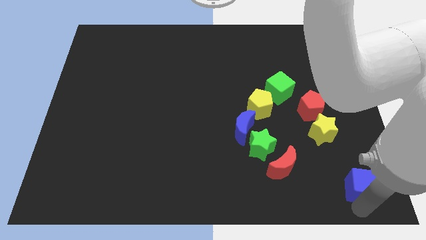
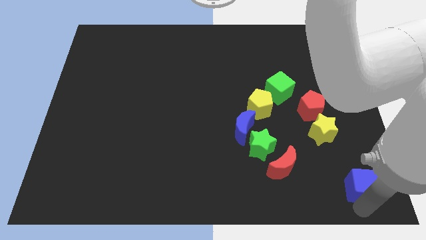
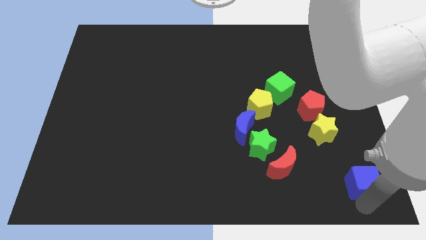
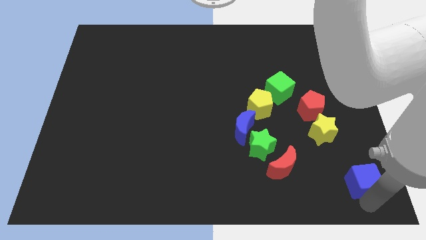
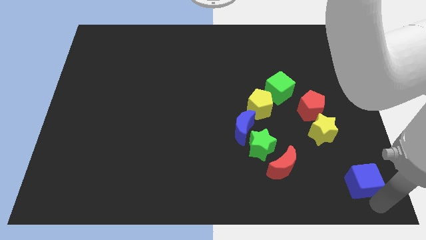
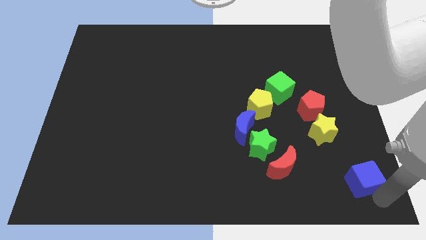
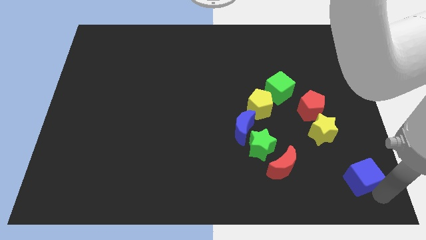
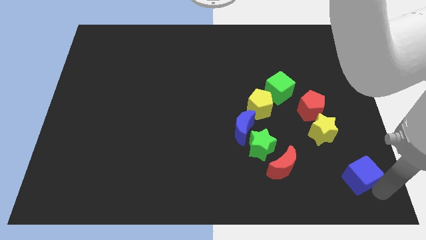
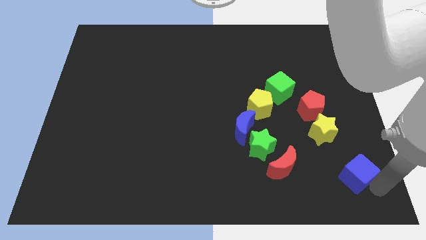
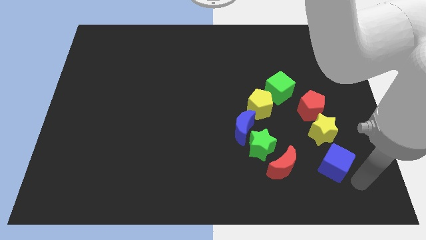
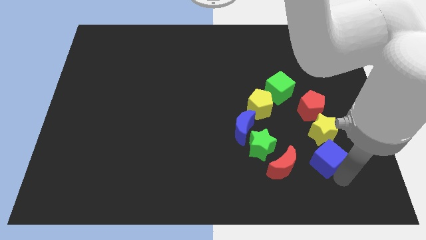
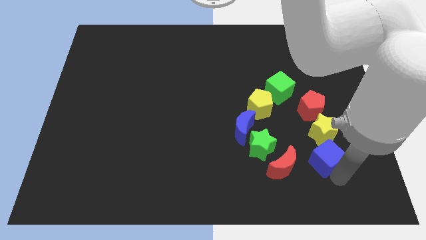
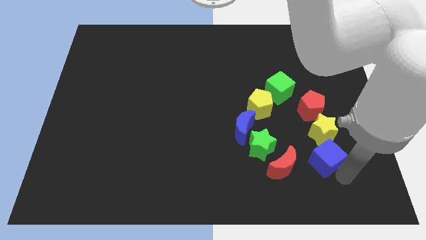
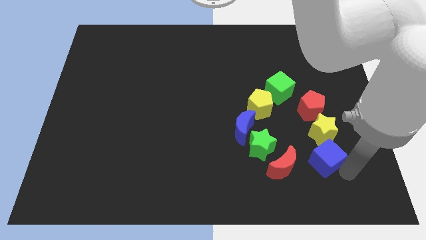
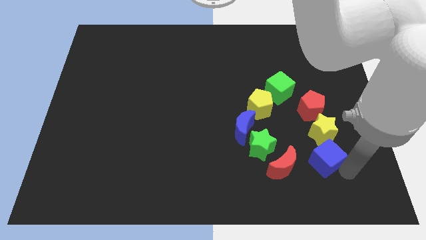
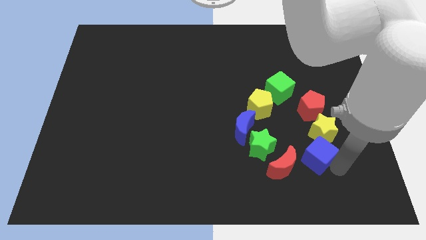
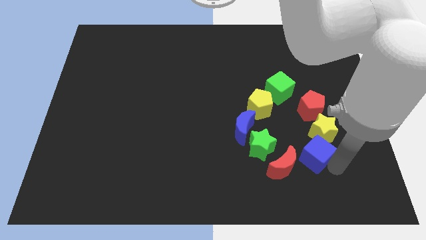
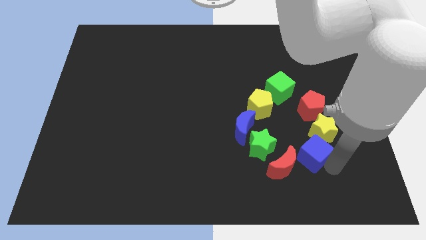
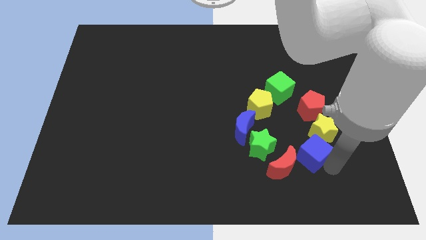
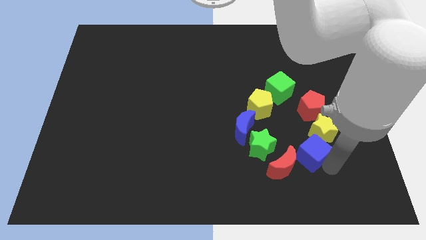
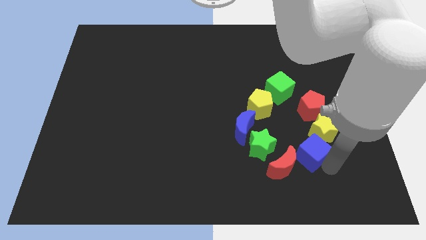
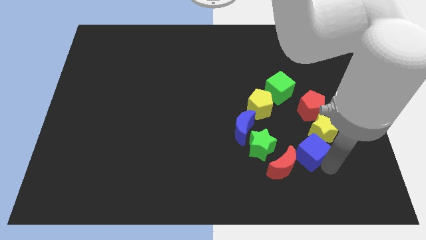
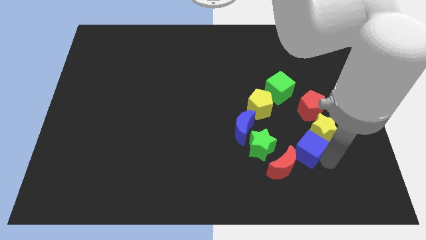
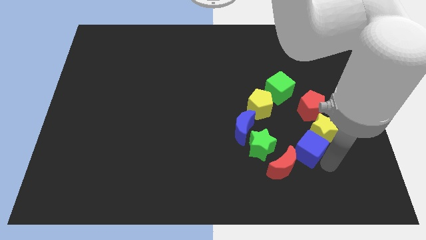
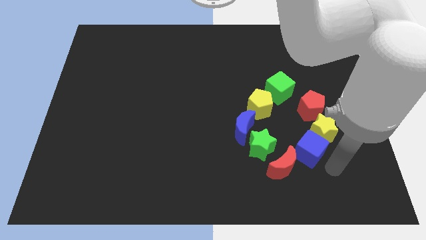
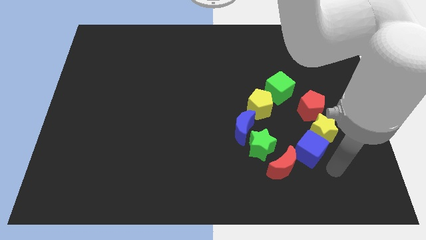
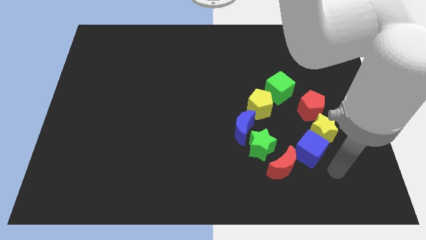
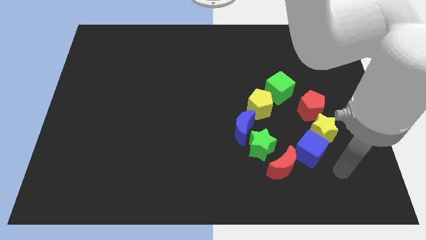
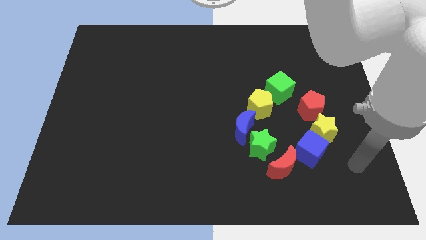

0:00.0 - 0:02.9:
move the blue cube between red moon and yellow star

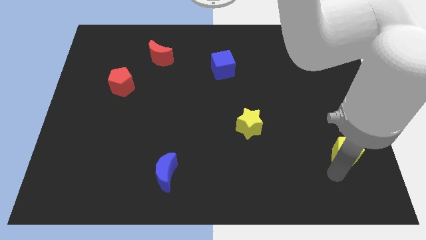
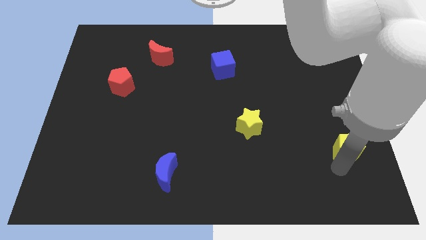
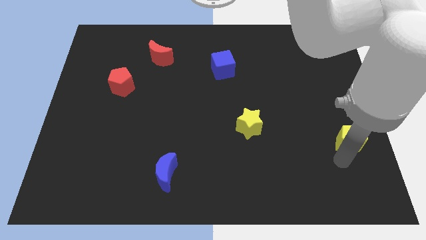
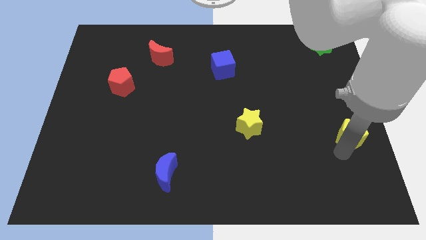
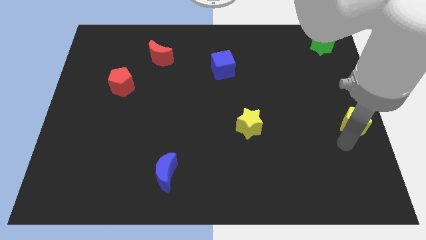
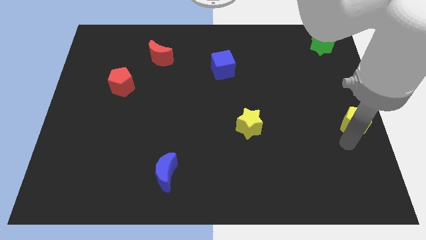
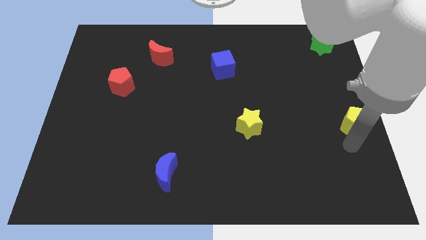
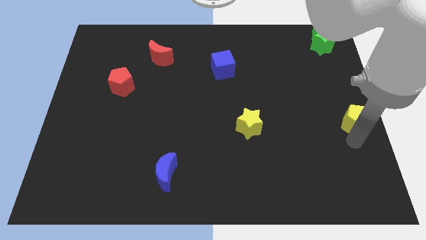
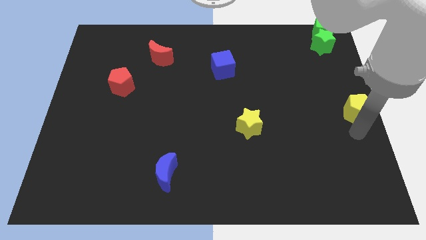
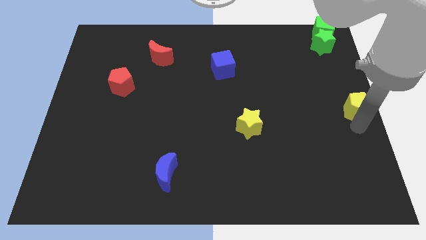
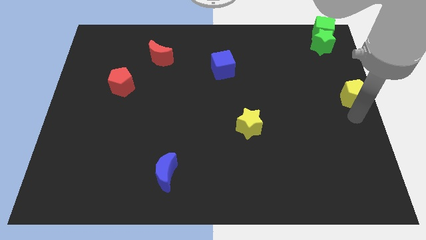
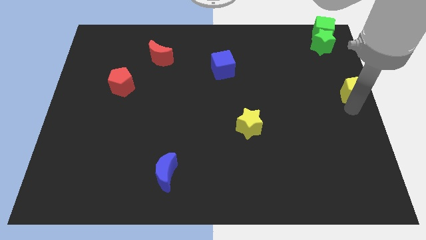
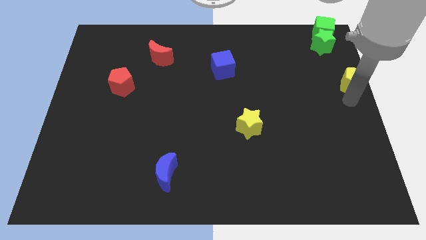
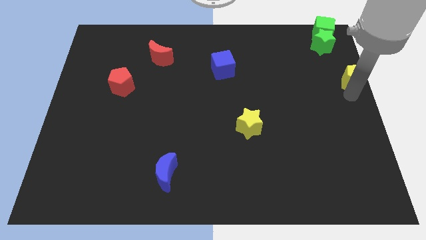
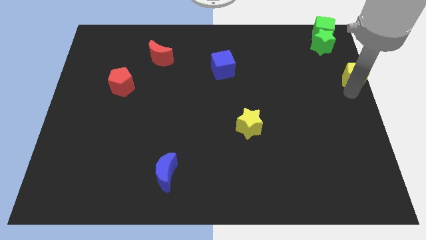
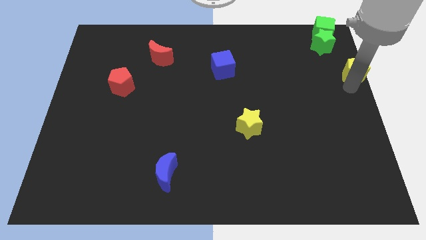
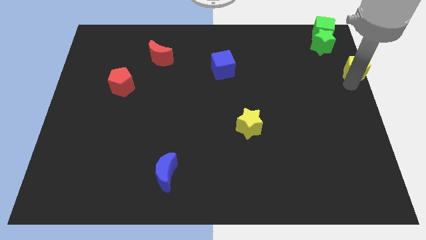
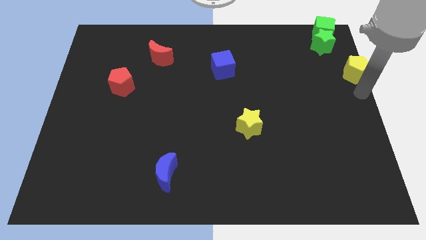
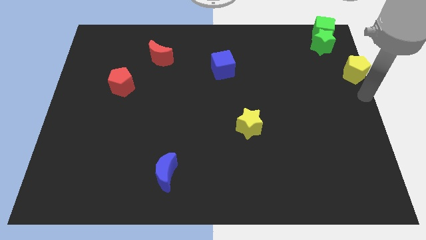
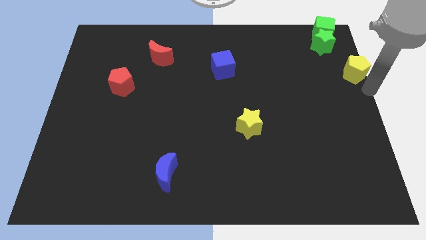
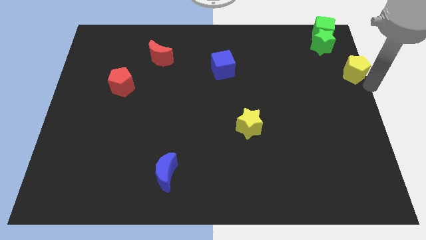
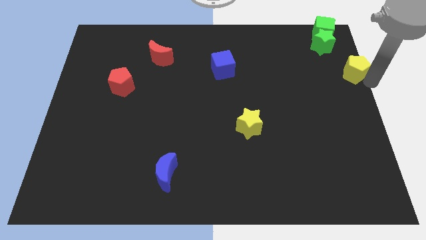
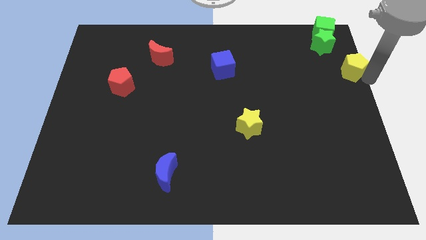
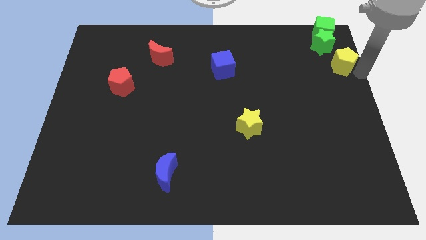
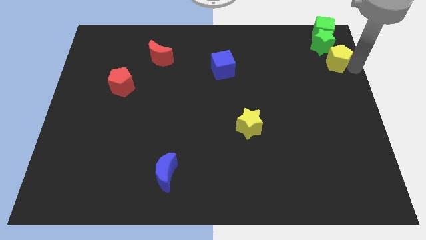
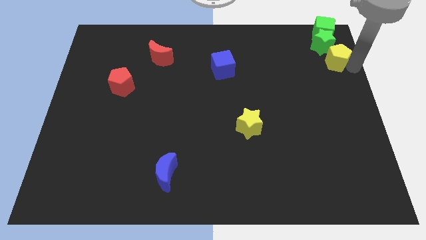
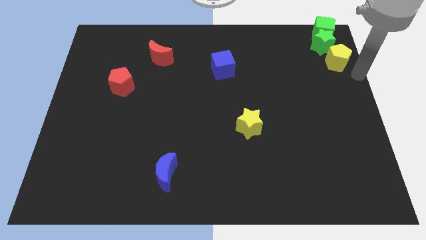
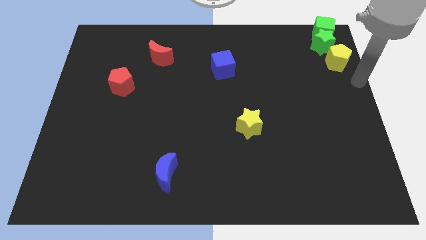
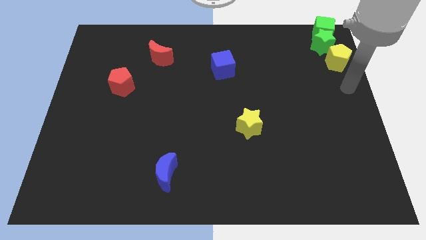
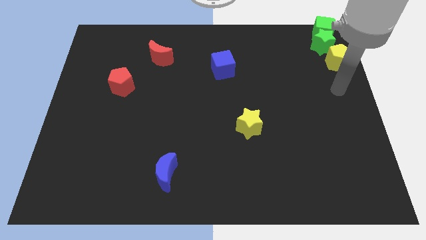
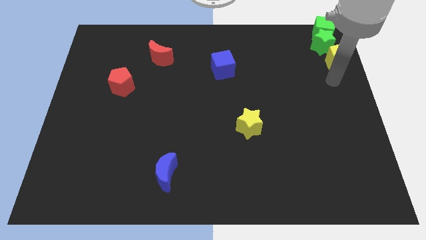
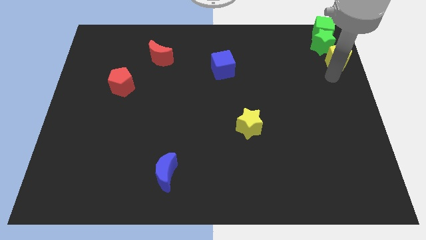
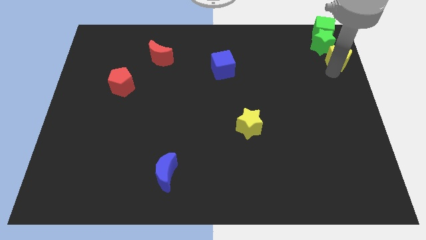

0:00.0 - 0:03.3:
move the yellow pentagon to the bottom right of the green star

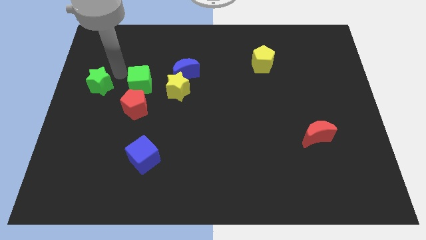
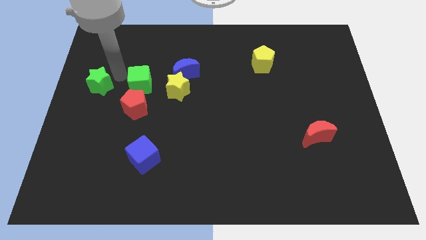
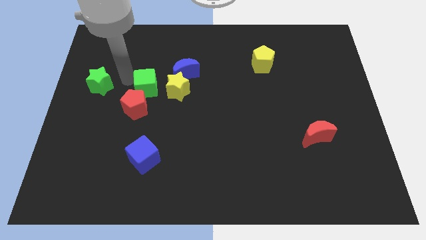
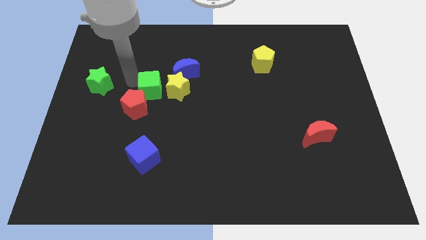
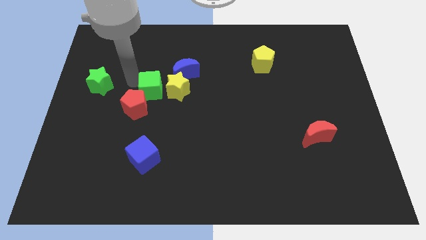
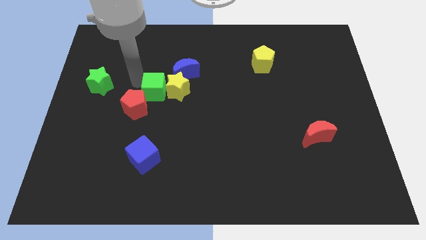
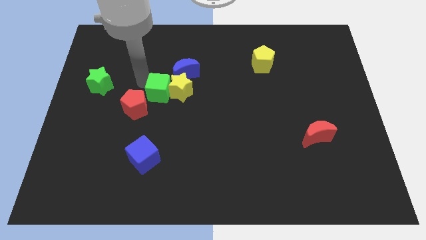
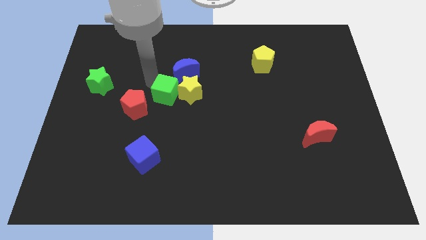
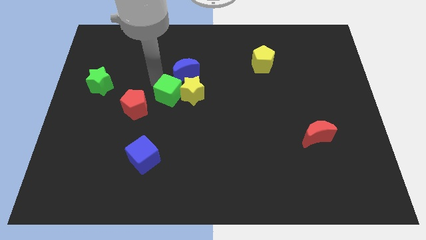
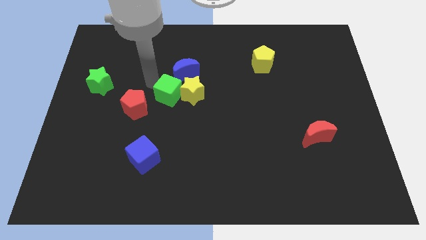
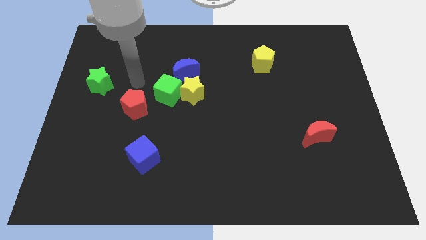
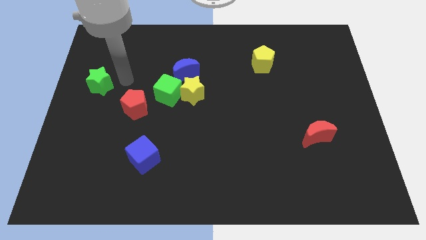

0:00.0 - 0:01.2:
push the green cube into the yellow star

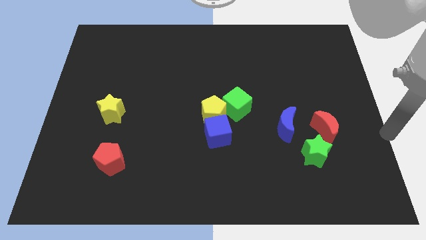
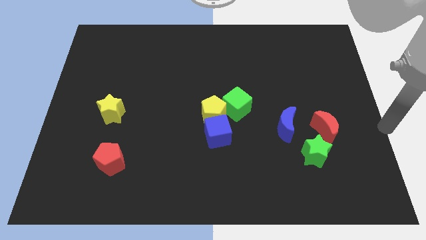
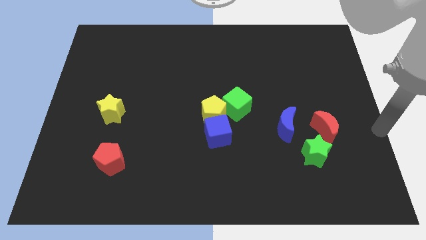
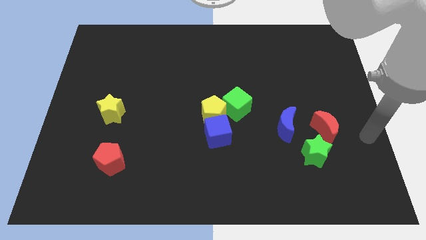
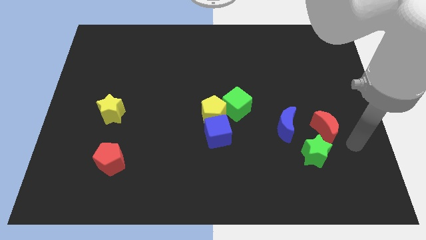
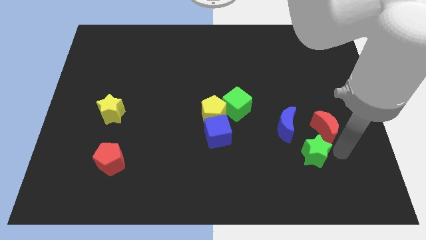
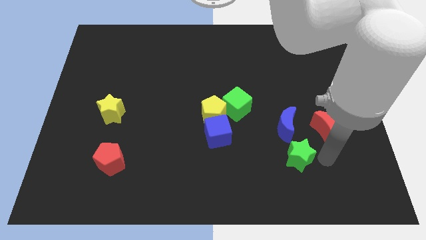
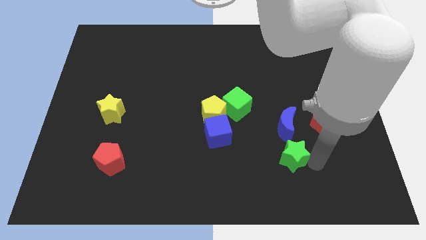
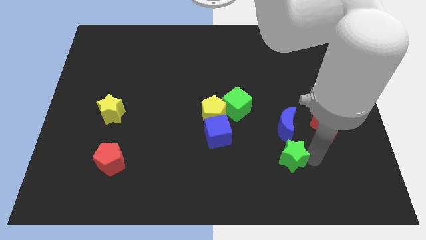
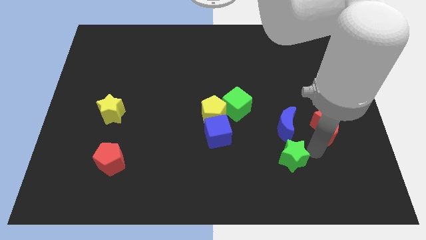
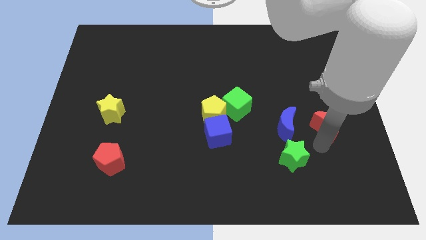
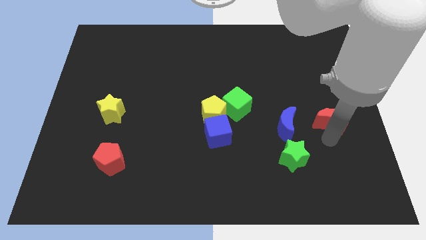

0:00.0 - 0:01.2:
separate the green star and red moon

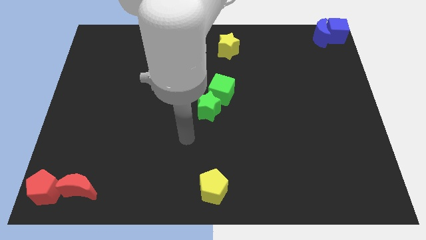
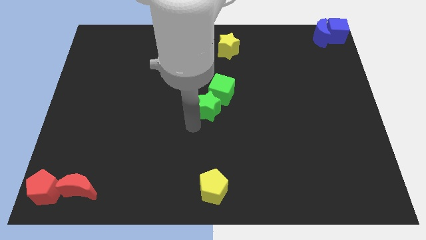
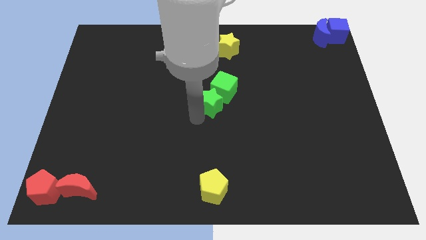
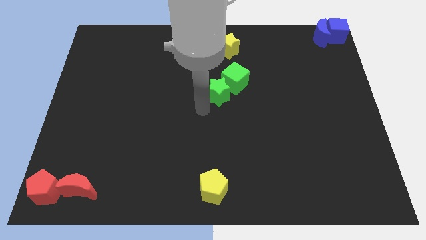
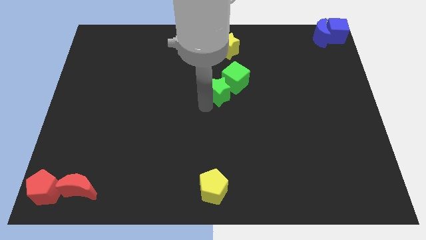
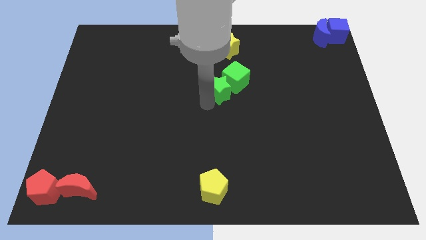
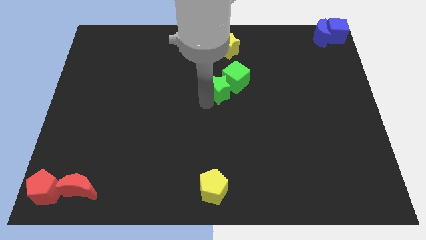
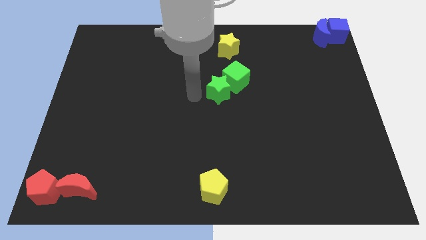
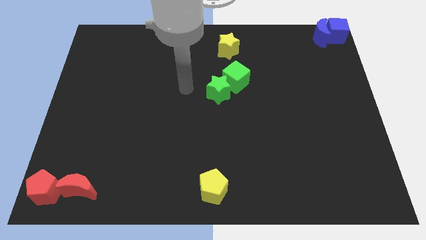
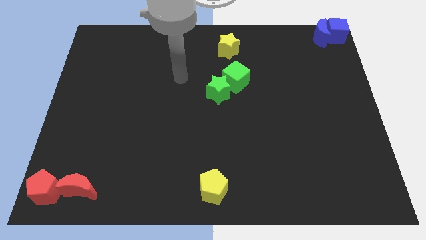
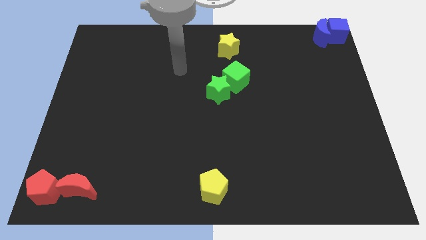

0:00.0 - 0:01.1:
push the green cube with the green star towards the center of the board
